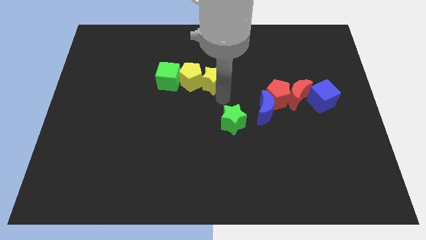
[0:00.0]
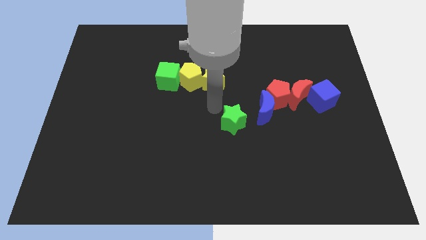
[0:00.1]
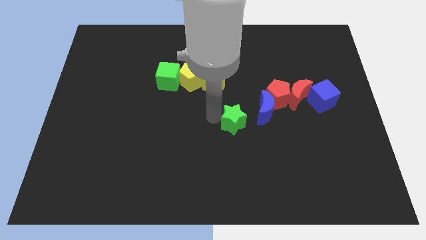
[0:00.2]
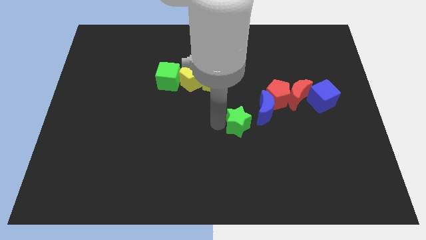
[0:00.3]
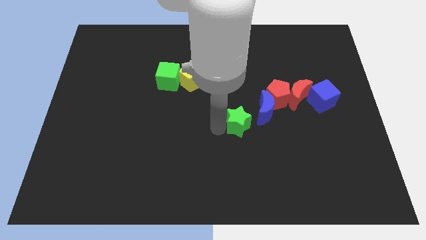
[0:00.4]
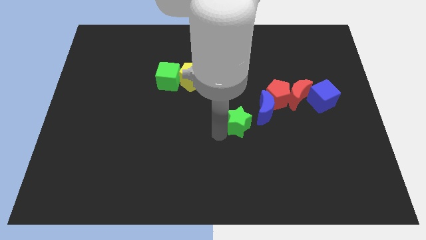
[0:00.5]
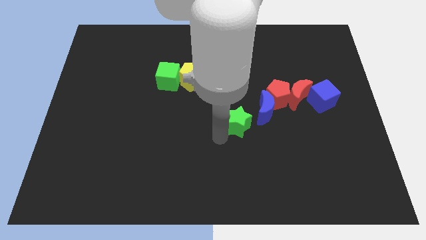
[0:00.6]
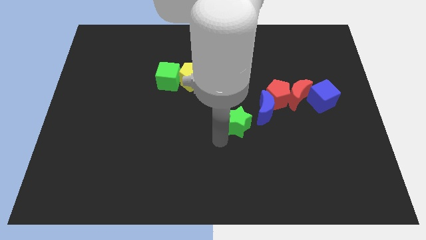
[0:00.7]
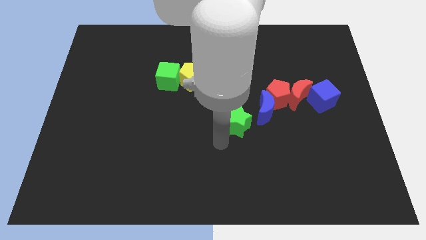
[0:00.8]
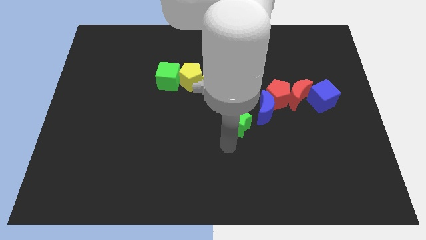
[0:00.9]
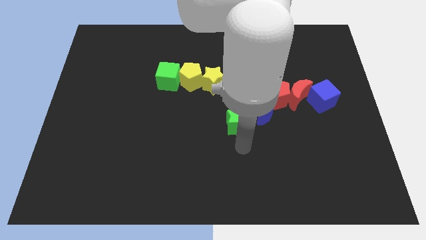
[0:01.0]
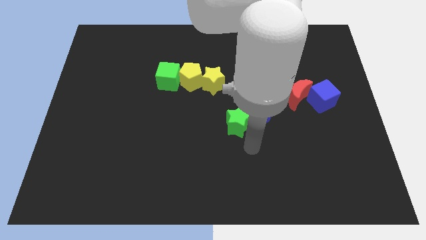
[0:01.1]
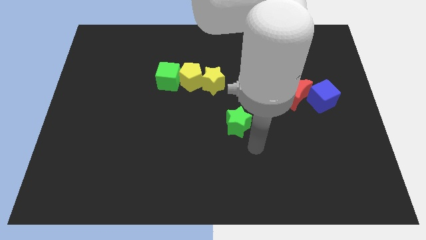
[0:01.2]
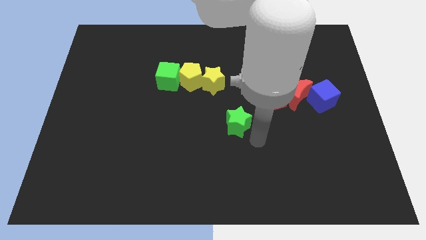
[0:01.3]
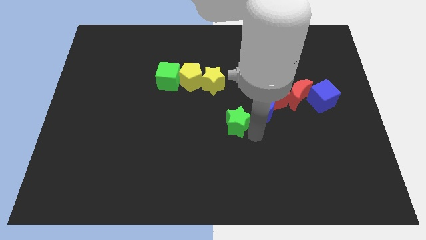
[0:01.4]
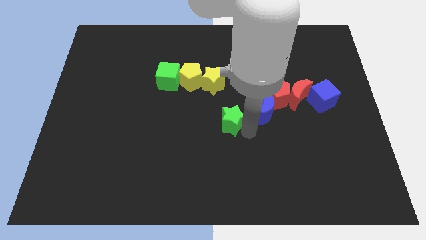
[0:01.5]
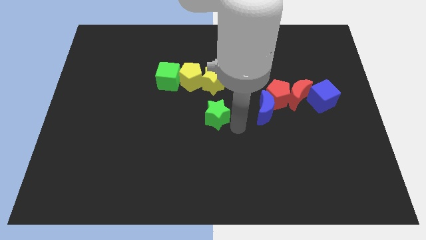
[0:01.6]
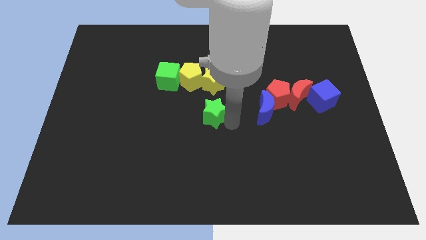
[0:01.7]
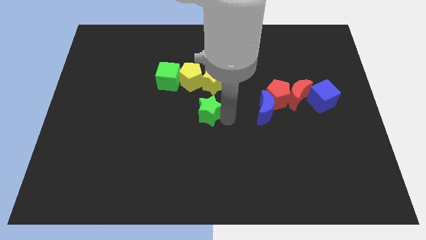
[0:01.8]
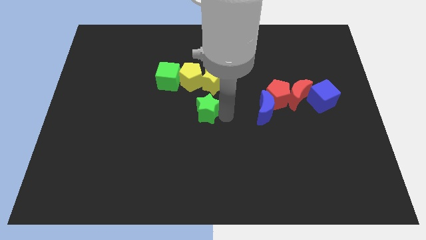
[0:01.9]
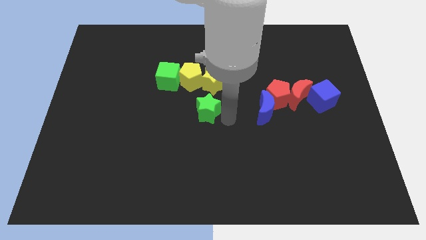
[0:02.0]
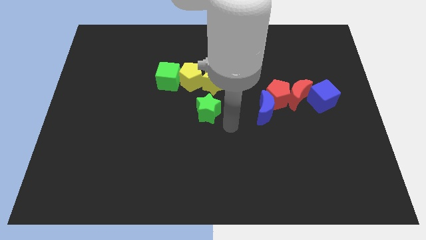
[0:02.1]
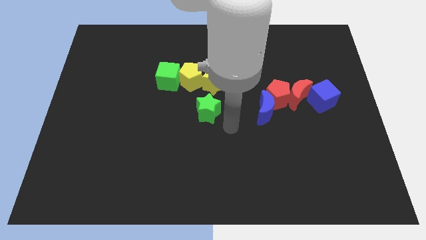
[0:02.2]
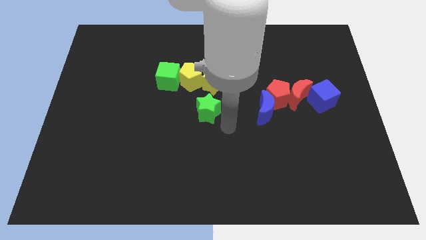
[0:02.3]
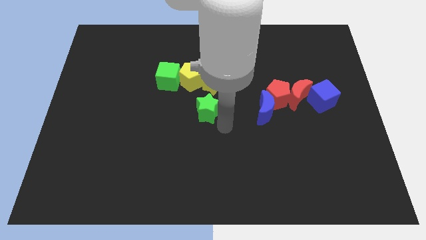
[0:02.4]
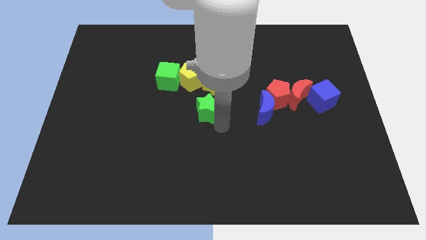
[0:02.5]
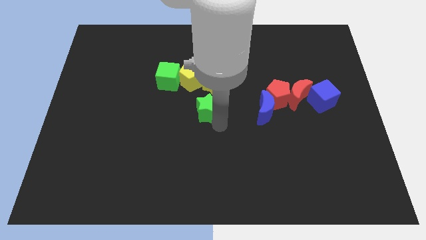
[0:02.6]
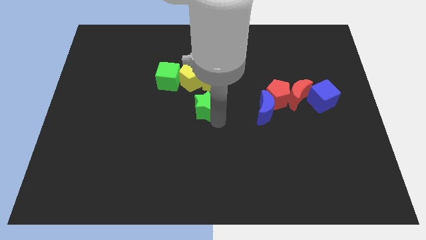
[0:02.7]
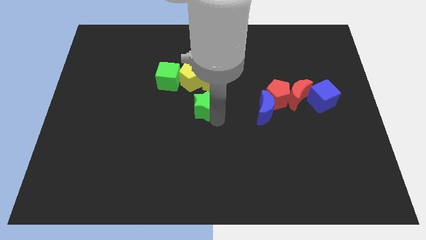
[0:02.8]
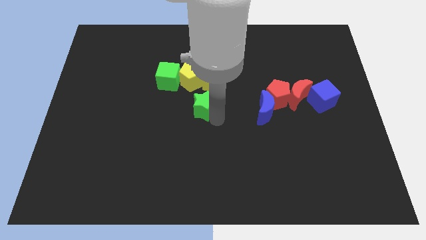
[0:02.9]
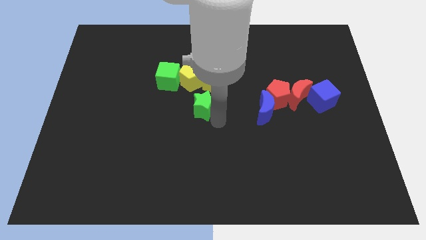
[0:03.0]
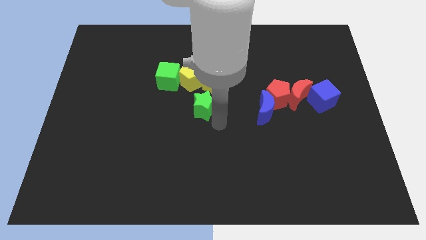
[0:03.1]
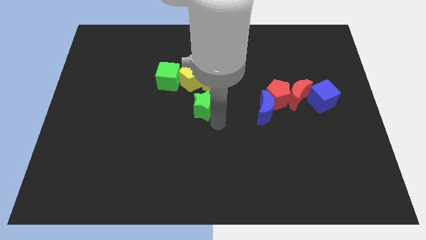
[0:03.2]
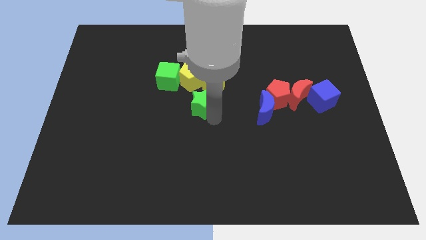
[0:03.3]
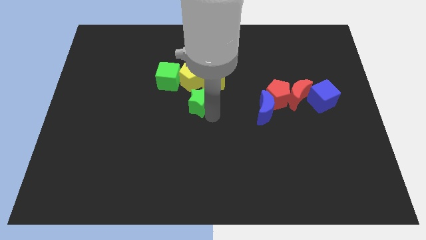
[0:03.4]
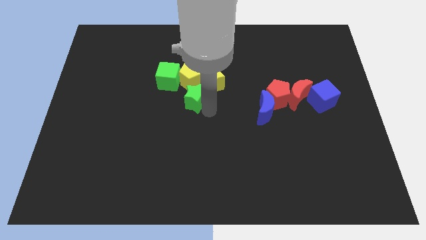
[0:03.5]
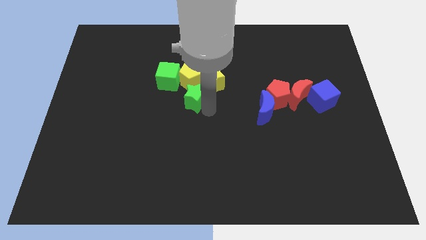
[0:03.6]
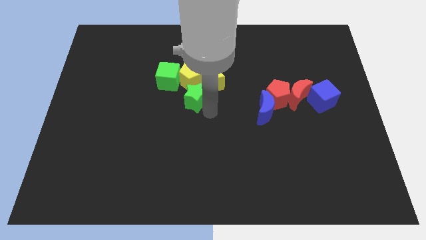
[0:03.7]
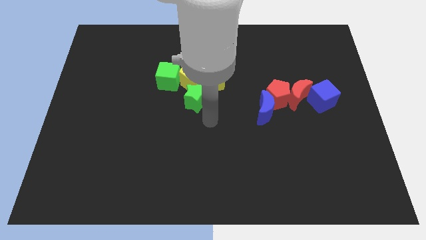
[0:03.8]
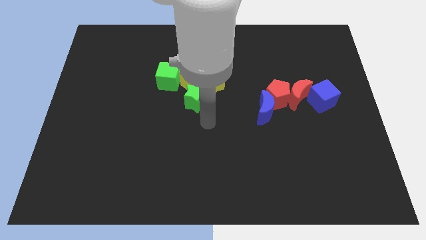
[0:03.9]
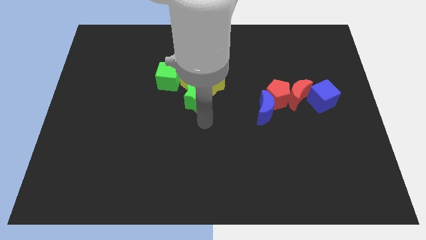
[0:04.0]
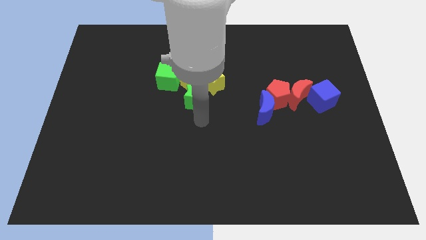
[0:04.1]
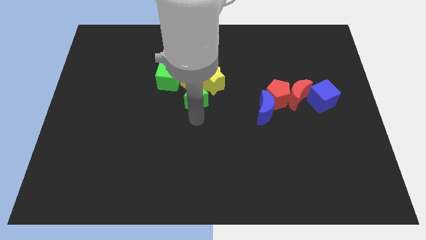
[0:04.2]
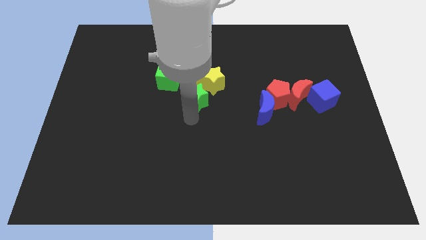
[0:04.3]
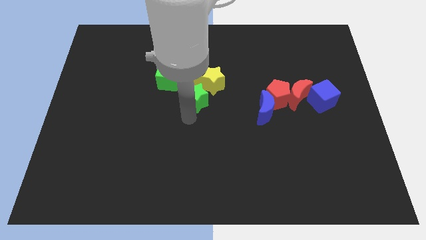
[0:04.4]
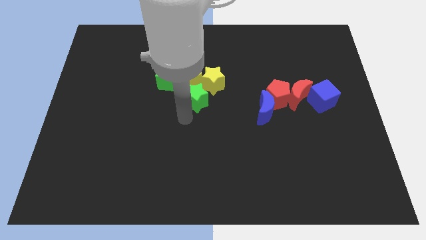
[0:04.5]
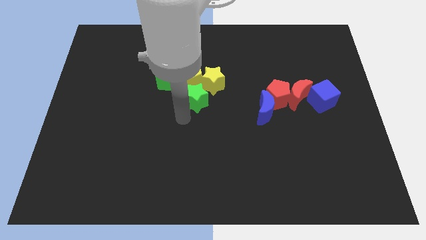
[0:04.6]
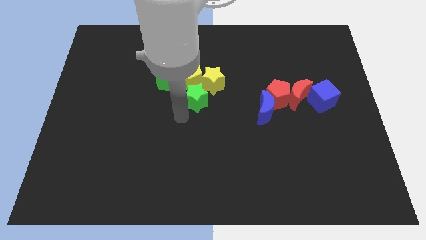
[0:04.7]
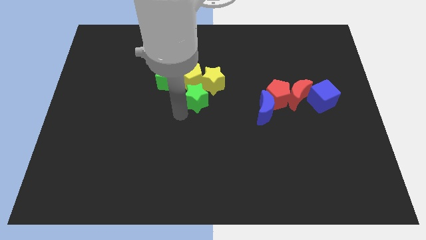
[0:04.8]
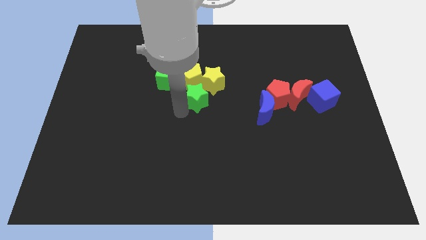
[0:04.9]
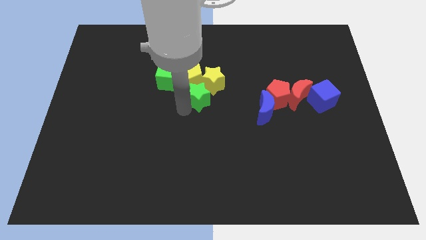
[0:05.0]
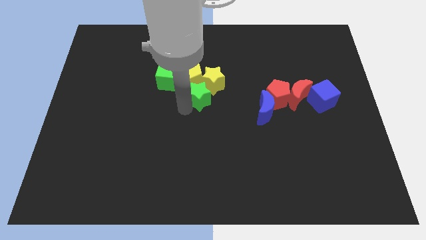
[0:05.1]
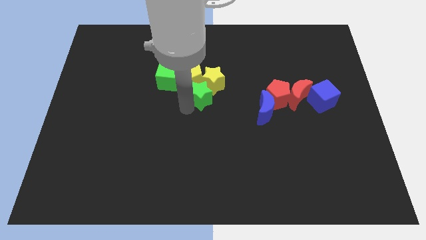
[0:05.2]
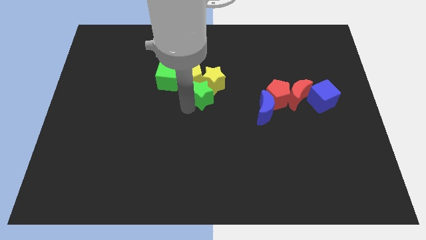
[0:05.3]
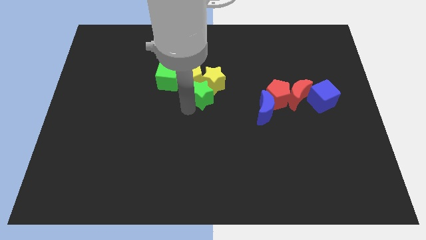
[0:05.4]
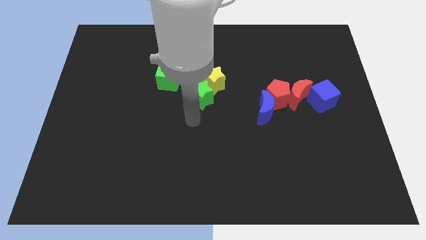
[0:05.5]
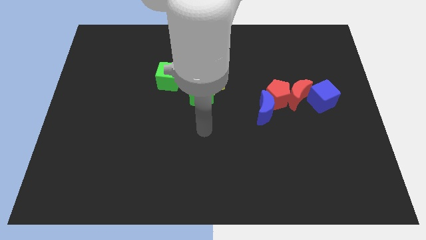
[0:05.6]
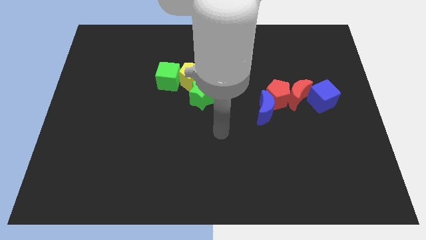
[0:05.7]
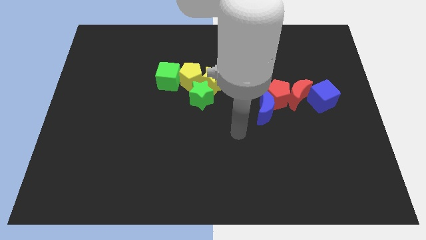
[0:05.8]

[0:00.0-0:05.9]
place the green star below the yellow star

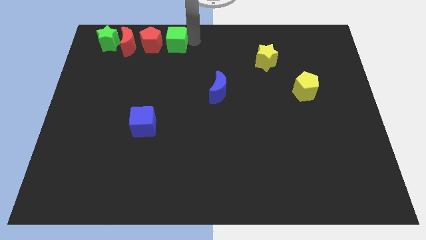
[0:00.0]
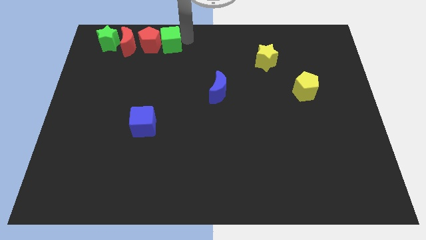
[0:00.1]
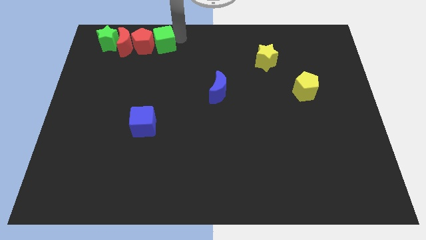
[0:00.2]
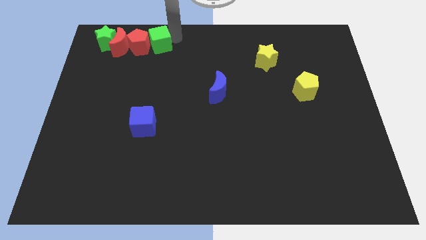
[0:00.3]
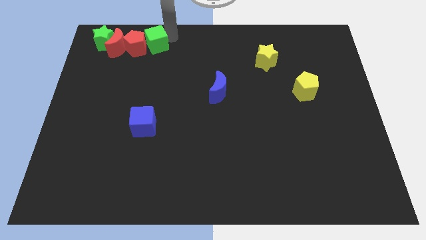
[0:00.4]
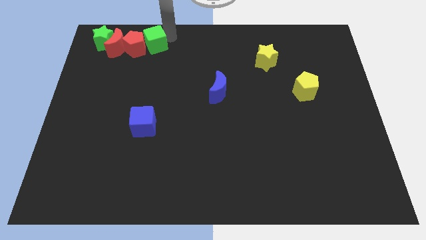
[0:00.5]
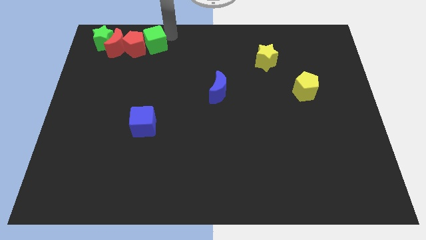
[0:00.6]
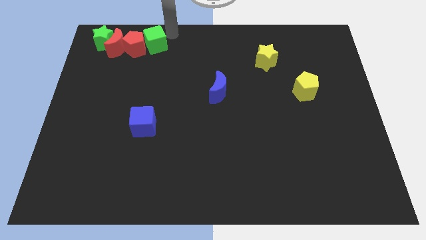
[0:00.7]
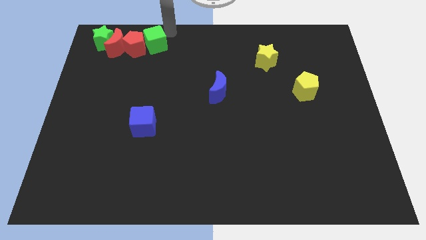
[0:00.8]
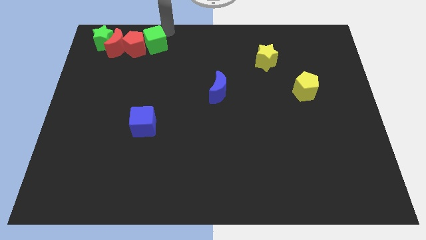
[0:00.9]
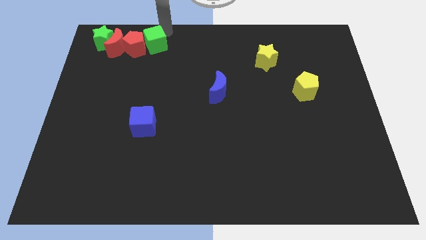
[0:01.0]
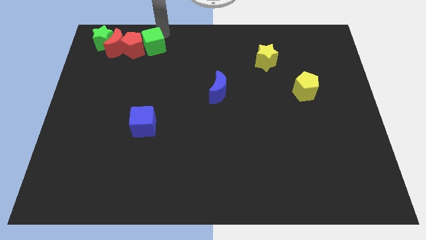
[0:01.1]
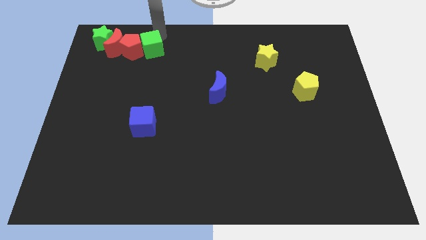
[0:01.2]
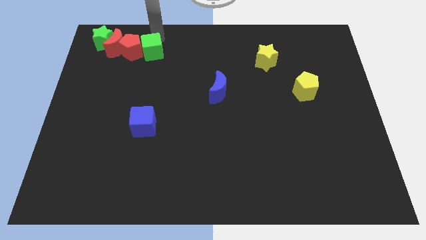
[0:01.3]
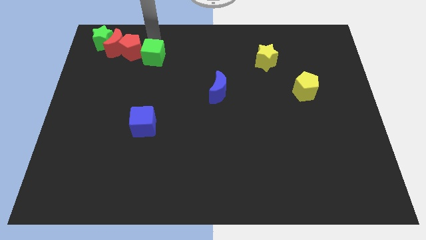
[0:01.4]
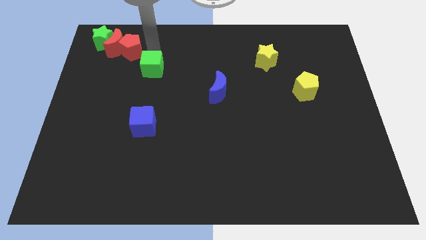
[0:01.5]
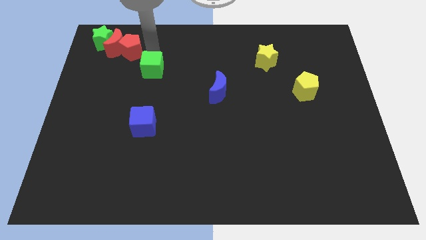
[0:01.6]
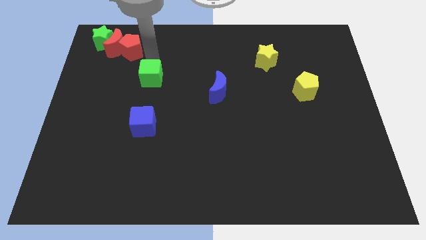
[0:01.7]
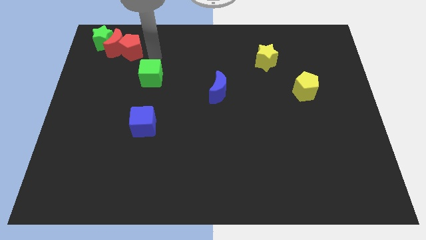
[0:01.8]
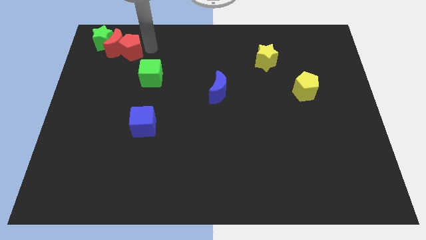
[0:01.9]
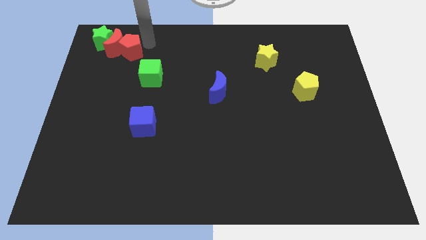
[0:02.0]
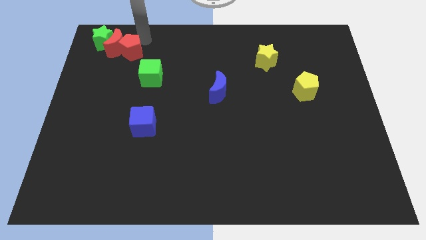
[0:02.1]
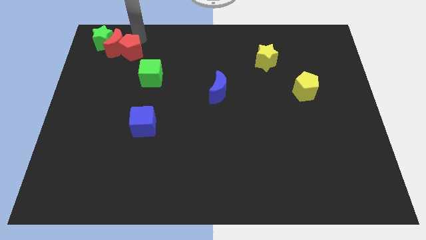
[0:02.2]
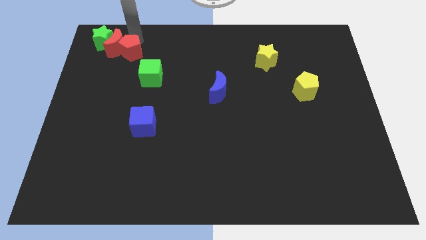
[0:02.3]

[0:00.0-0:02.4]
place green cube above blue cube

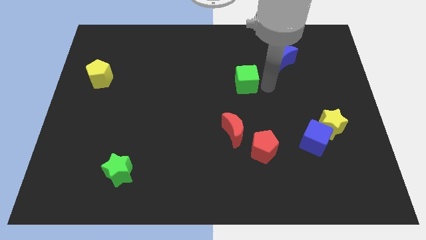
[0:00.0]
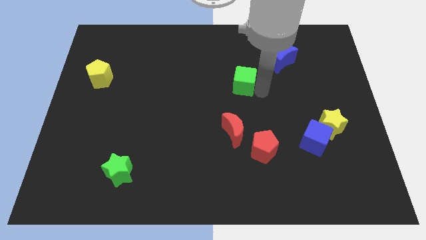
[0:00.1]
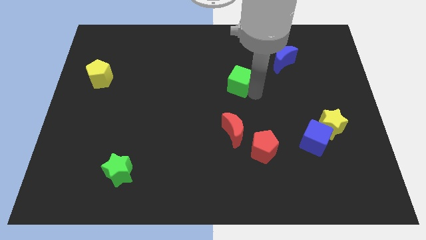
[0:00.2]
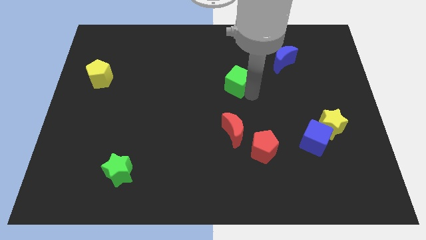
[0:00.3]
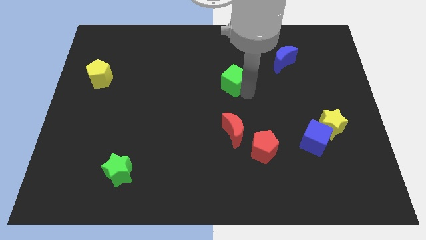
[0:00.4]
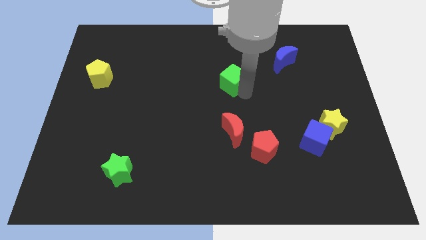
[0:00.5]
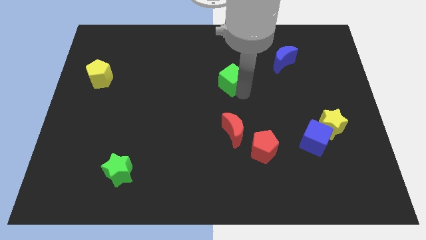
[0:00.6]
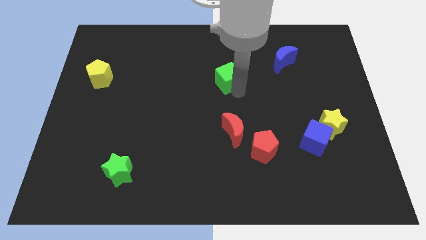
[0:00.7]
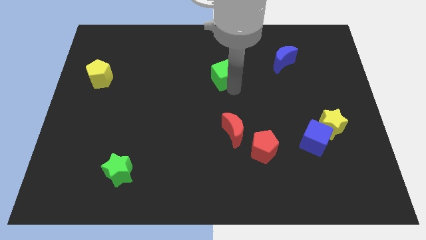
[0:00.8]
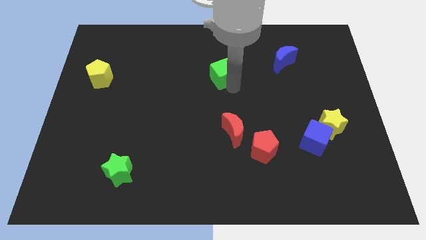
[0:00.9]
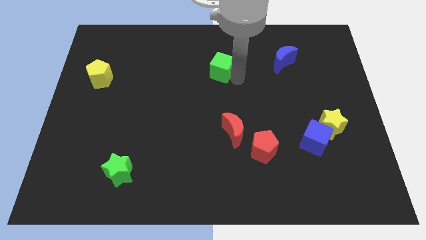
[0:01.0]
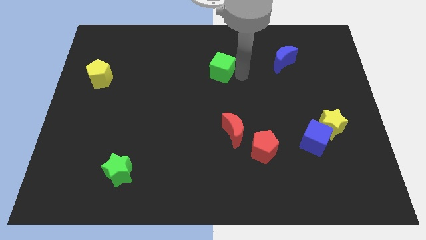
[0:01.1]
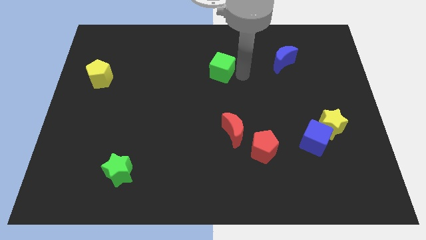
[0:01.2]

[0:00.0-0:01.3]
move green cube left beside the blue moon
